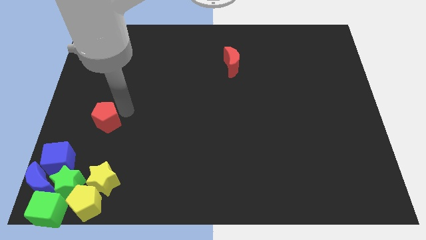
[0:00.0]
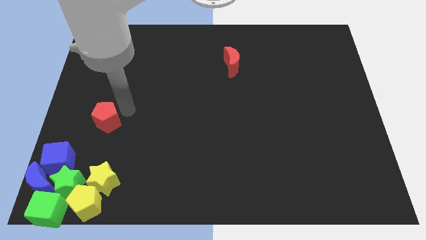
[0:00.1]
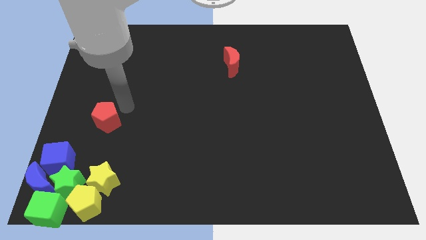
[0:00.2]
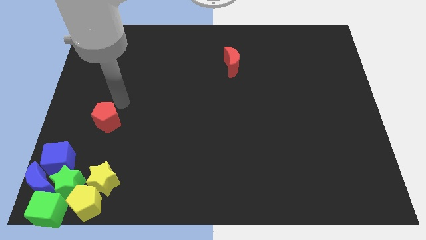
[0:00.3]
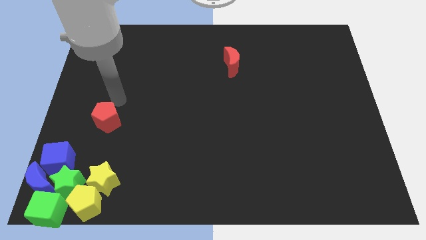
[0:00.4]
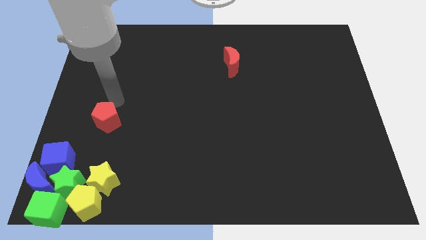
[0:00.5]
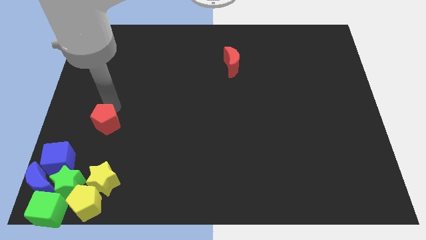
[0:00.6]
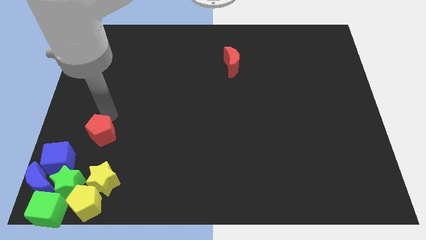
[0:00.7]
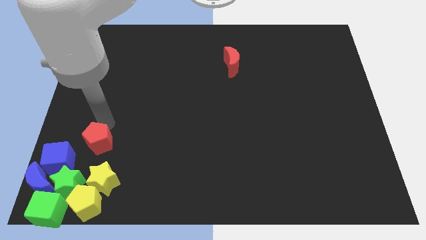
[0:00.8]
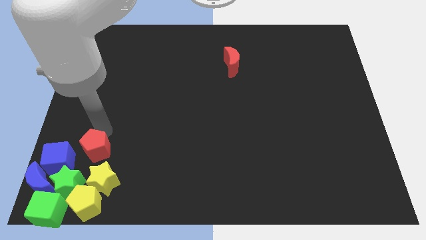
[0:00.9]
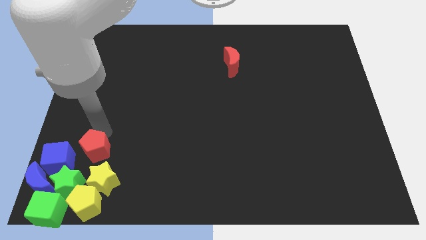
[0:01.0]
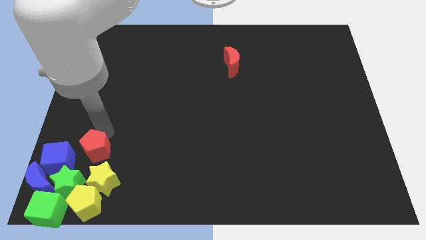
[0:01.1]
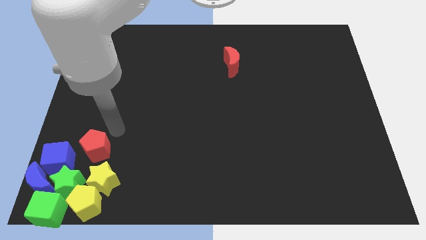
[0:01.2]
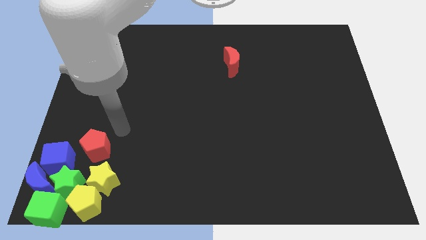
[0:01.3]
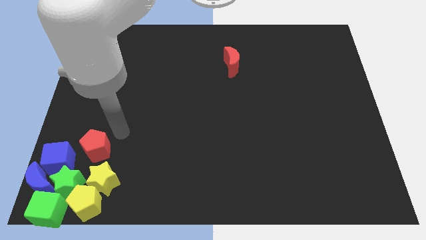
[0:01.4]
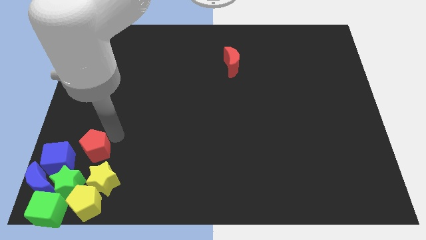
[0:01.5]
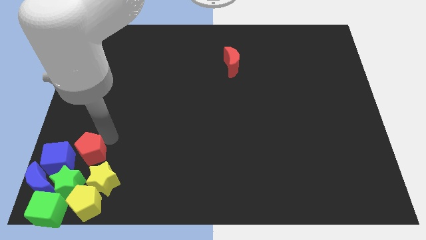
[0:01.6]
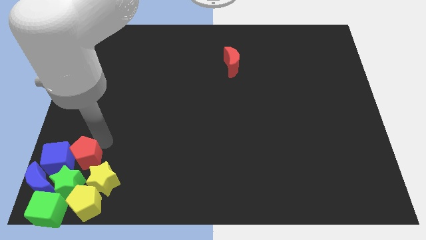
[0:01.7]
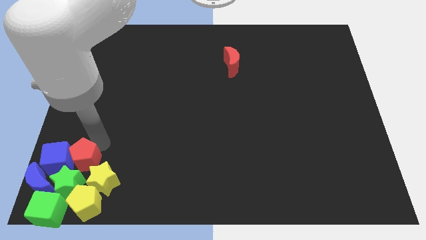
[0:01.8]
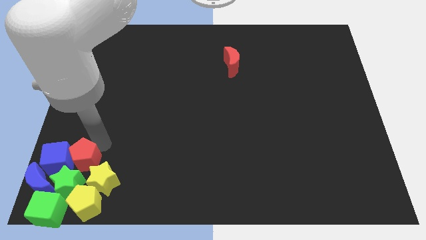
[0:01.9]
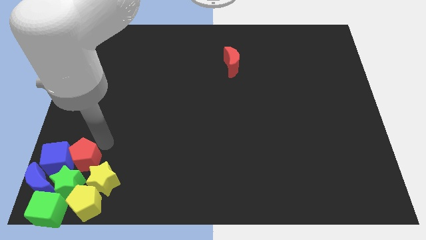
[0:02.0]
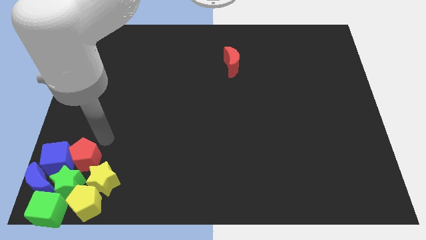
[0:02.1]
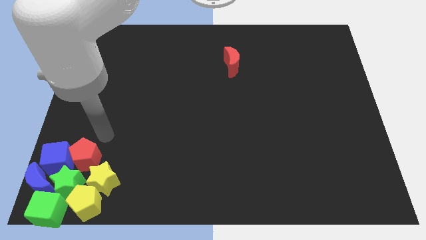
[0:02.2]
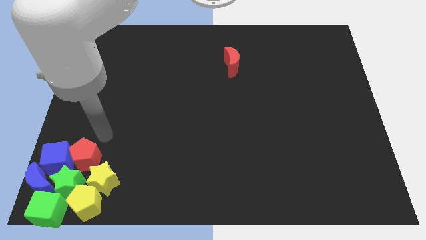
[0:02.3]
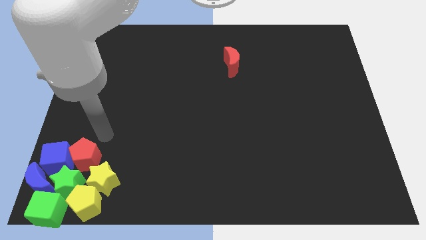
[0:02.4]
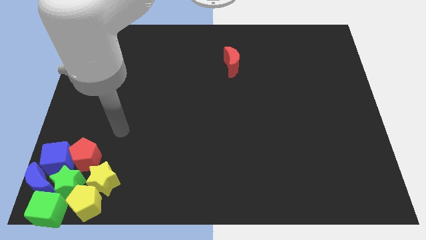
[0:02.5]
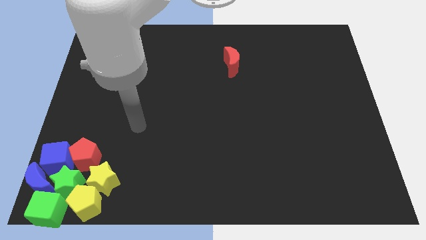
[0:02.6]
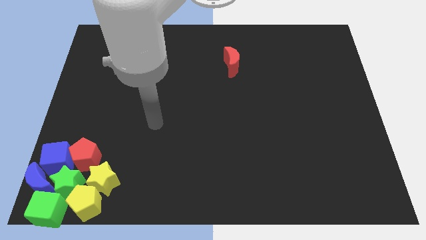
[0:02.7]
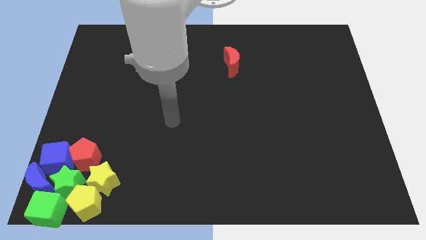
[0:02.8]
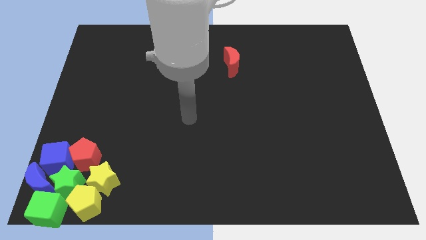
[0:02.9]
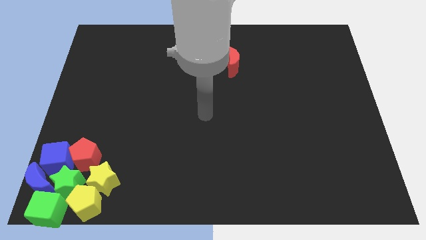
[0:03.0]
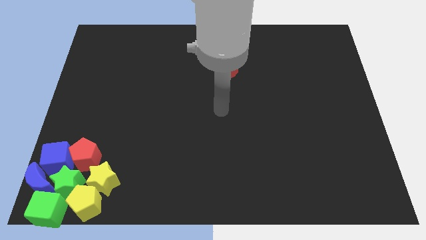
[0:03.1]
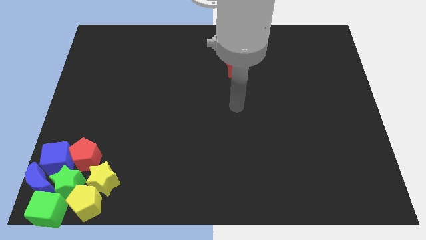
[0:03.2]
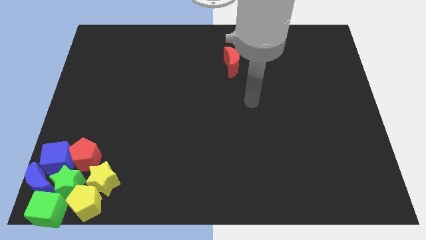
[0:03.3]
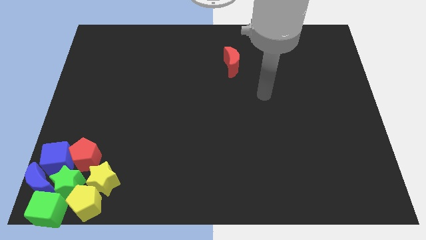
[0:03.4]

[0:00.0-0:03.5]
push the red pentagon into the right side of the blue cube

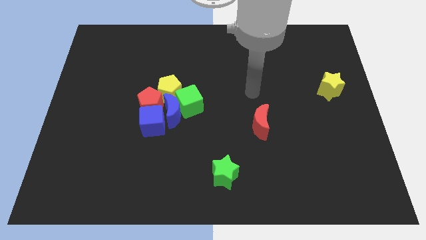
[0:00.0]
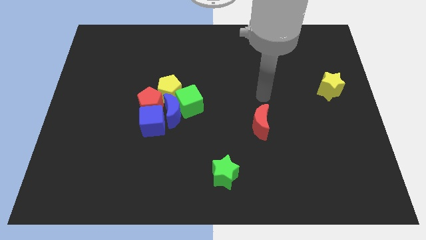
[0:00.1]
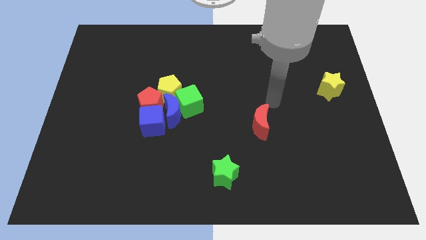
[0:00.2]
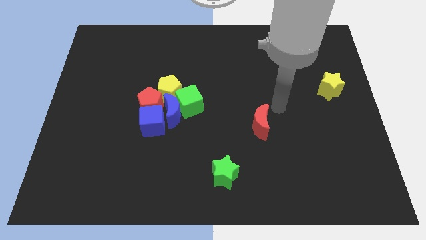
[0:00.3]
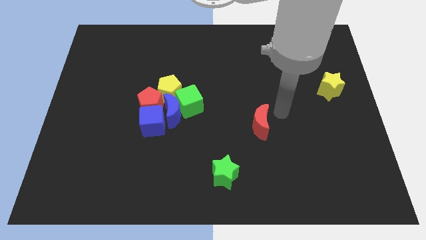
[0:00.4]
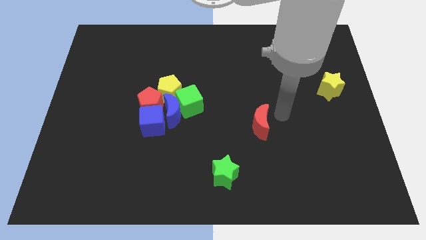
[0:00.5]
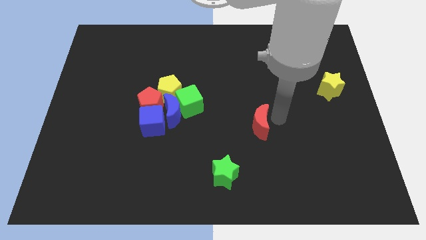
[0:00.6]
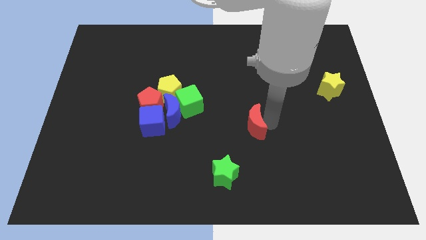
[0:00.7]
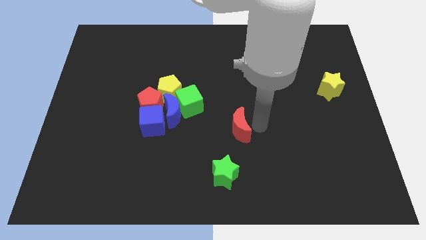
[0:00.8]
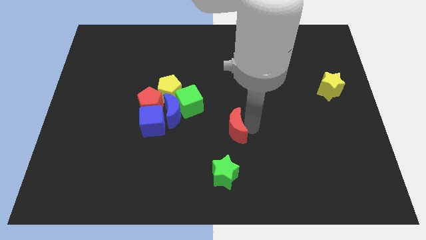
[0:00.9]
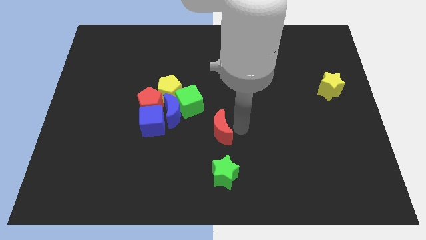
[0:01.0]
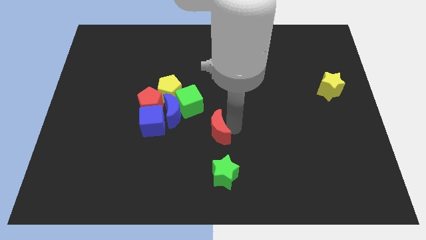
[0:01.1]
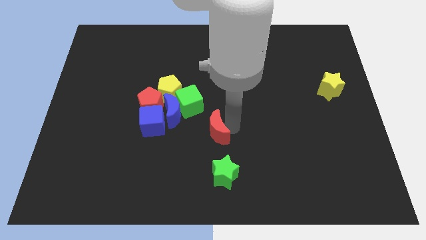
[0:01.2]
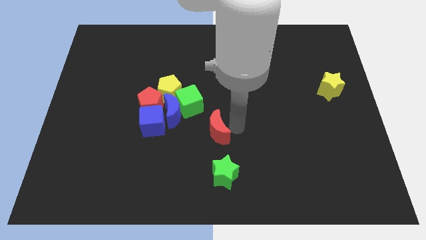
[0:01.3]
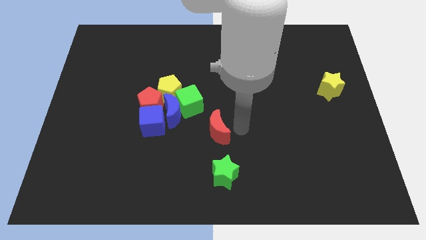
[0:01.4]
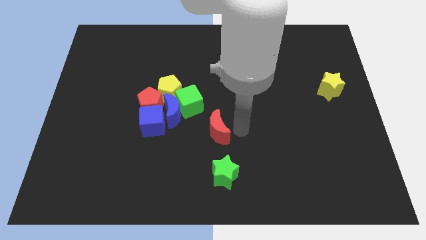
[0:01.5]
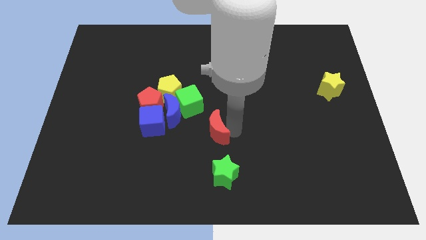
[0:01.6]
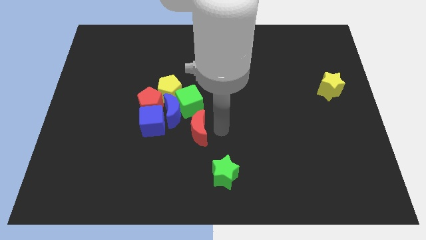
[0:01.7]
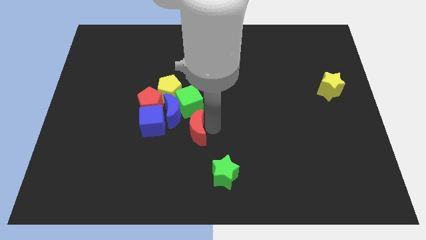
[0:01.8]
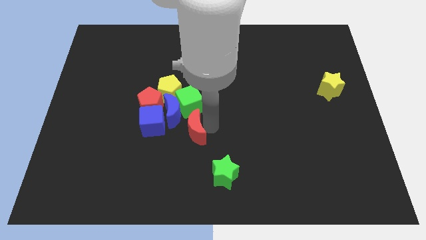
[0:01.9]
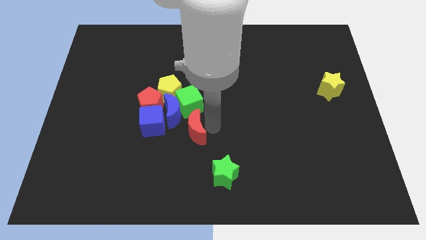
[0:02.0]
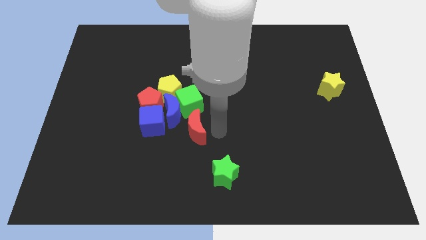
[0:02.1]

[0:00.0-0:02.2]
push the red crescent to the bottom of the green cube

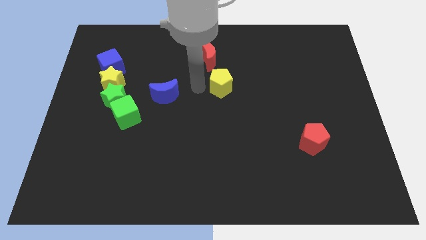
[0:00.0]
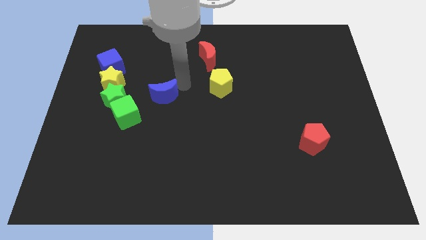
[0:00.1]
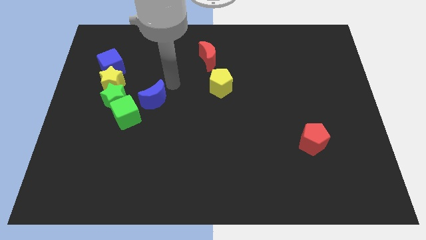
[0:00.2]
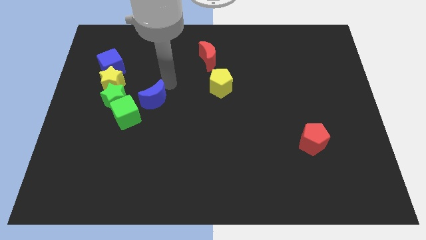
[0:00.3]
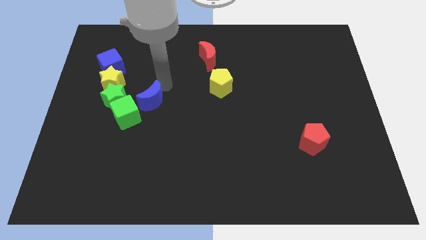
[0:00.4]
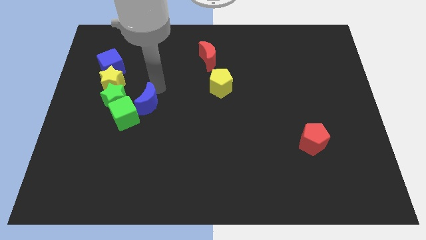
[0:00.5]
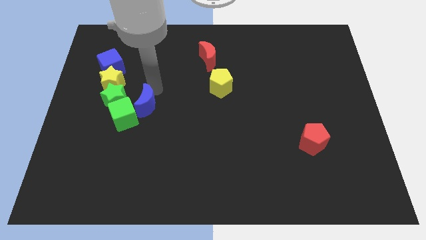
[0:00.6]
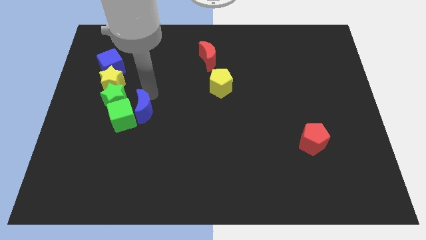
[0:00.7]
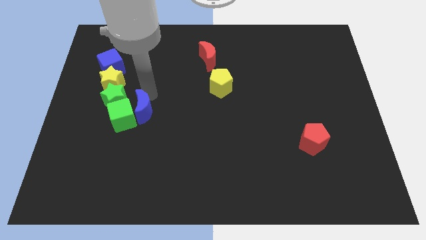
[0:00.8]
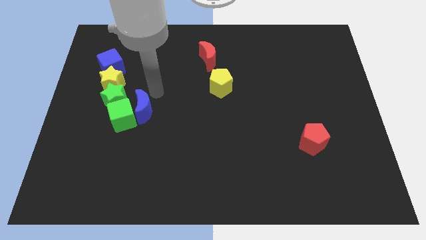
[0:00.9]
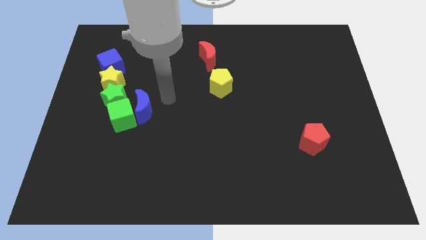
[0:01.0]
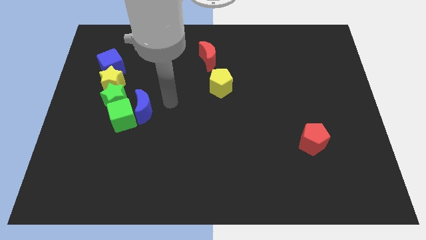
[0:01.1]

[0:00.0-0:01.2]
push the blue moon into the green cube

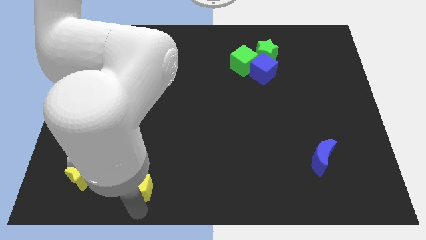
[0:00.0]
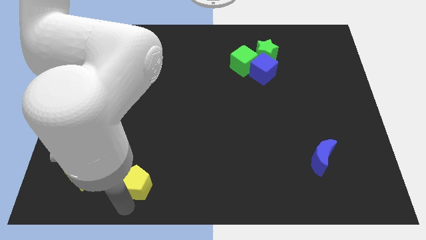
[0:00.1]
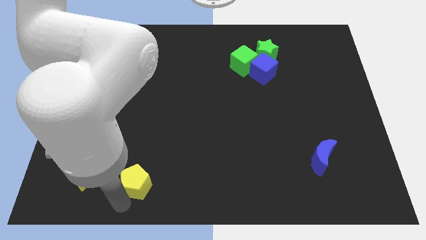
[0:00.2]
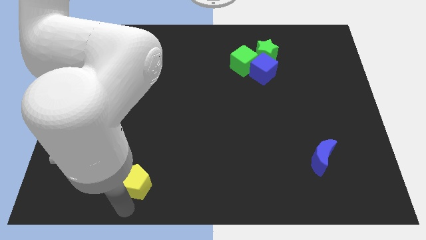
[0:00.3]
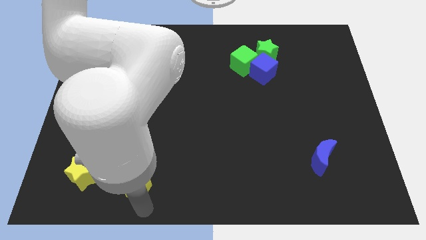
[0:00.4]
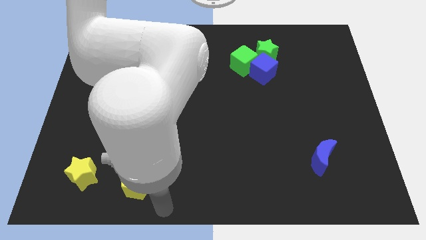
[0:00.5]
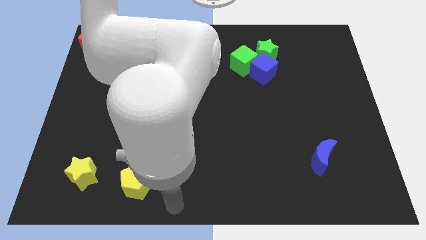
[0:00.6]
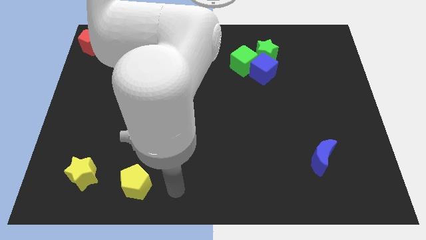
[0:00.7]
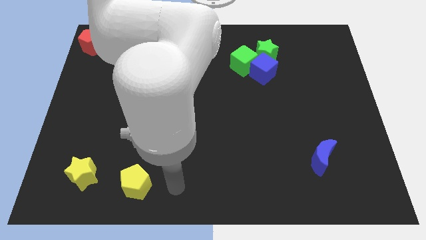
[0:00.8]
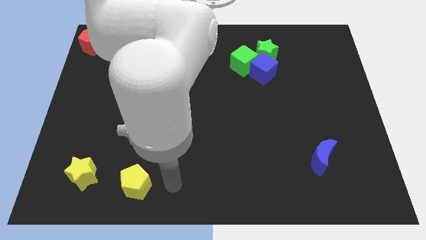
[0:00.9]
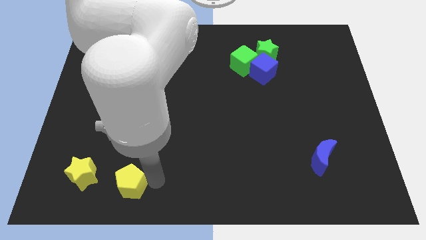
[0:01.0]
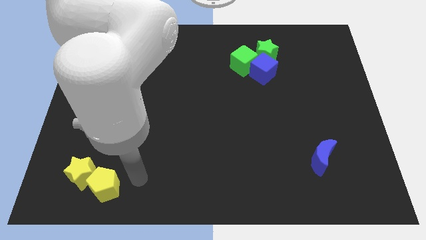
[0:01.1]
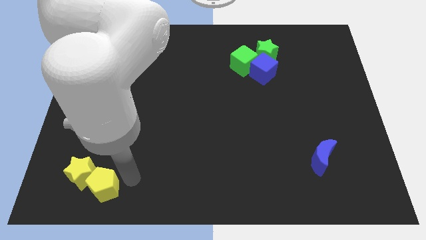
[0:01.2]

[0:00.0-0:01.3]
push the yellow pentagon into the yellow star

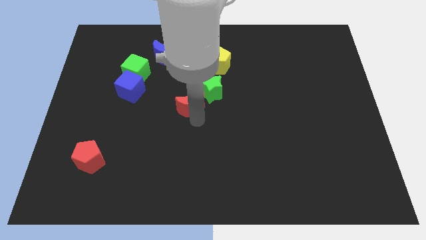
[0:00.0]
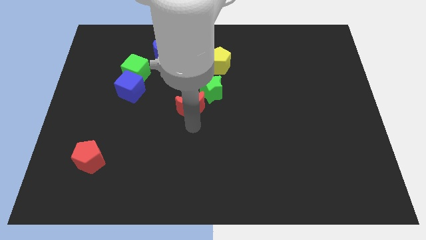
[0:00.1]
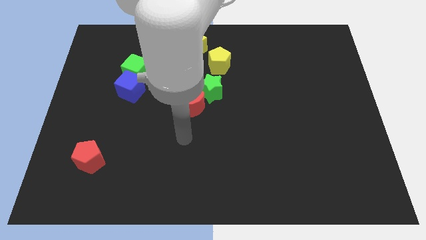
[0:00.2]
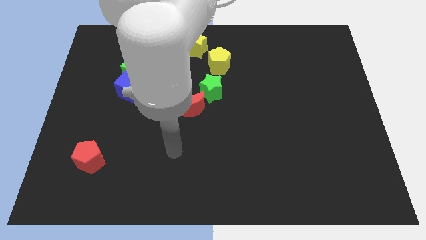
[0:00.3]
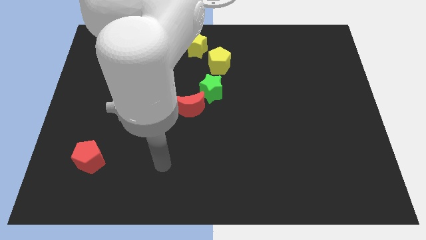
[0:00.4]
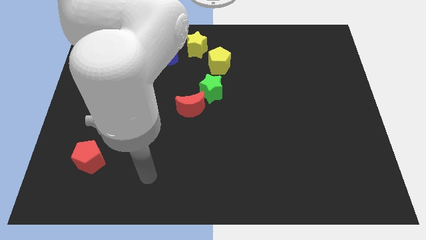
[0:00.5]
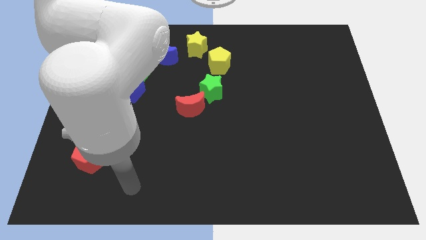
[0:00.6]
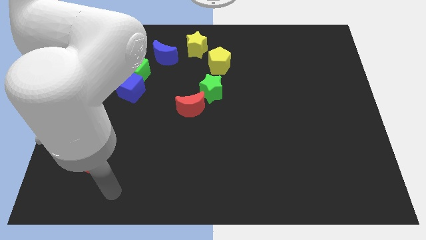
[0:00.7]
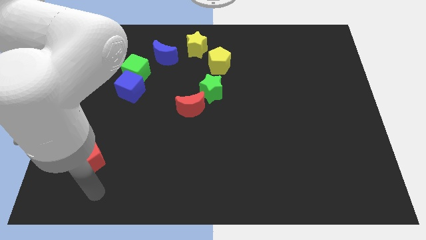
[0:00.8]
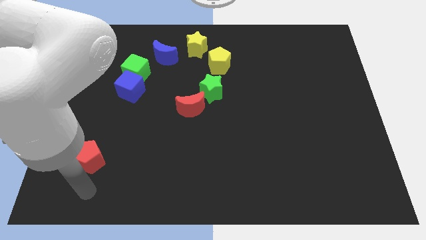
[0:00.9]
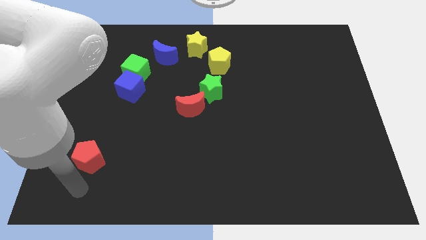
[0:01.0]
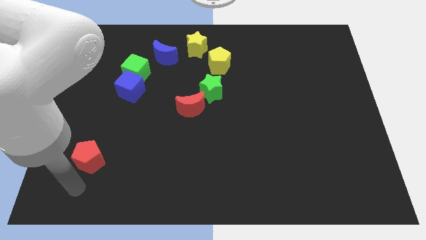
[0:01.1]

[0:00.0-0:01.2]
put your hand vertically below the red pentagon
